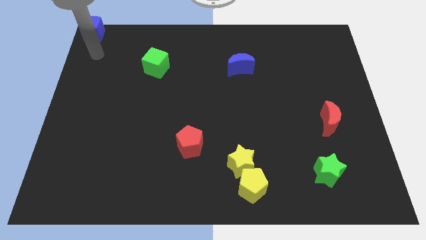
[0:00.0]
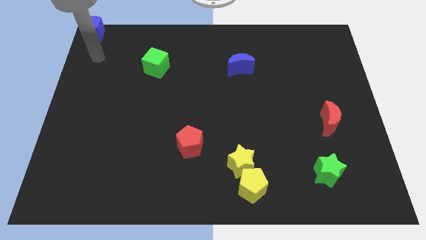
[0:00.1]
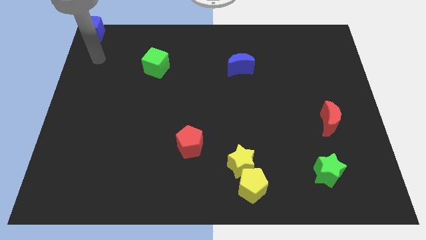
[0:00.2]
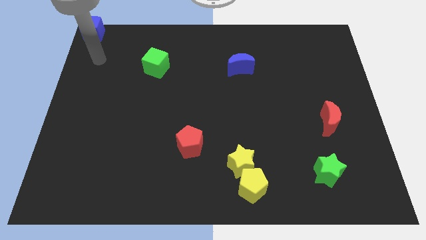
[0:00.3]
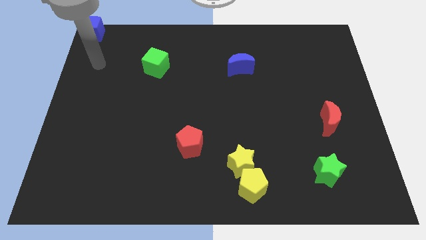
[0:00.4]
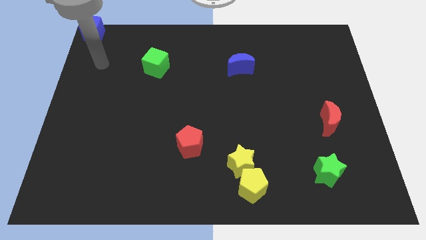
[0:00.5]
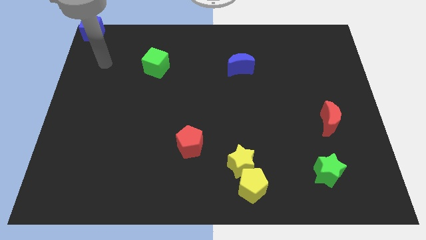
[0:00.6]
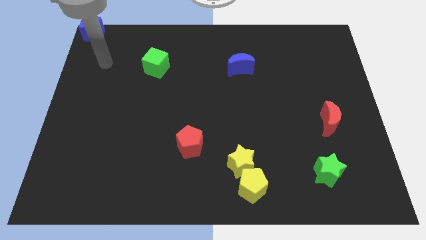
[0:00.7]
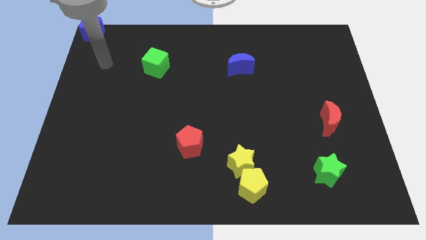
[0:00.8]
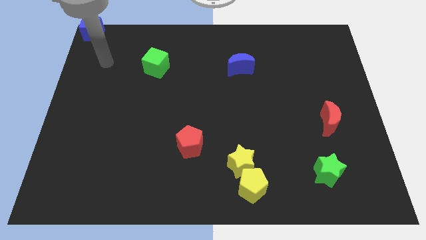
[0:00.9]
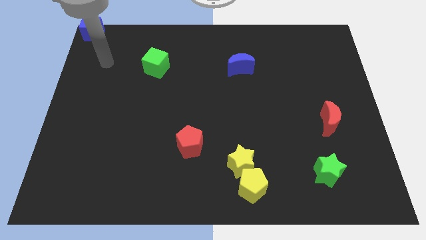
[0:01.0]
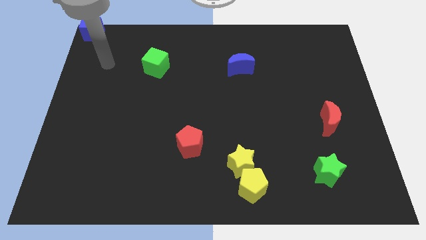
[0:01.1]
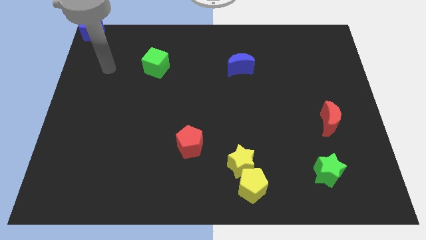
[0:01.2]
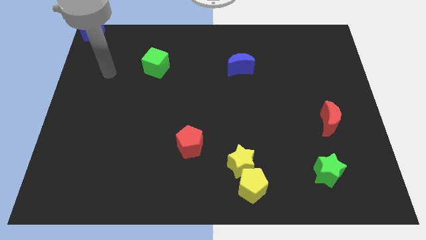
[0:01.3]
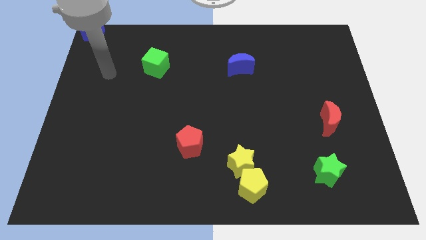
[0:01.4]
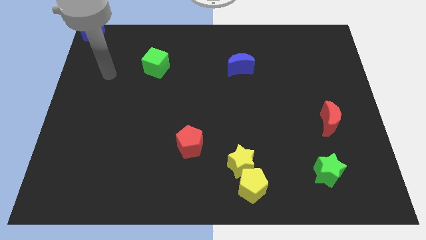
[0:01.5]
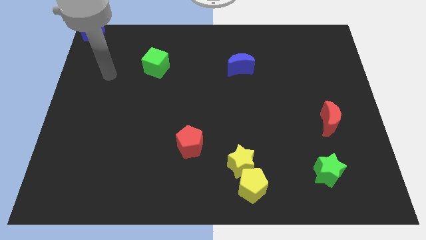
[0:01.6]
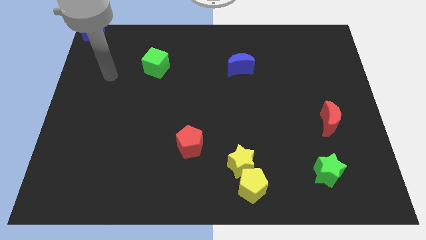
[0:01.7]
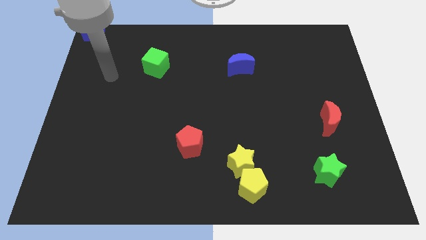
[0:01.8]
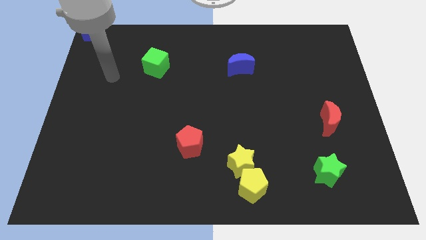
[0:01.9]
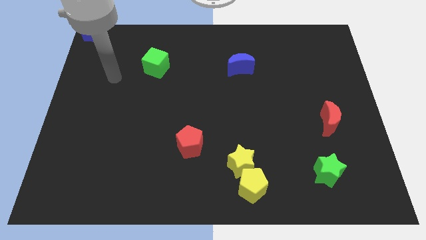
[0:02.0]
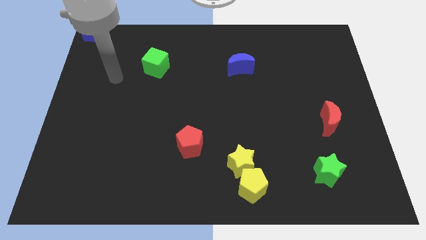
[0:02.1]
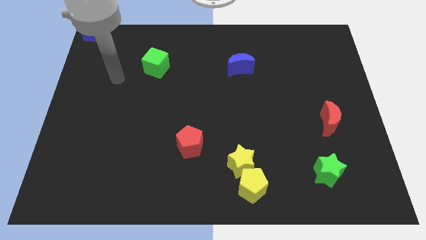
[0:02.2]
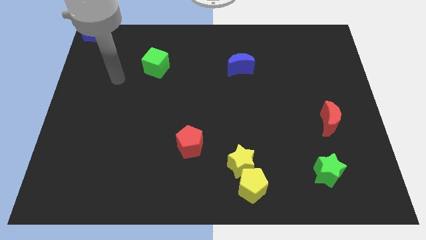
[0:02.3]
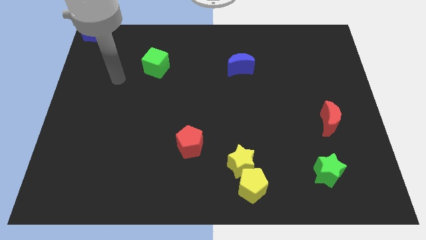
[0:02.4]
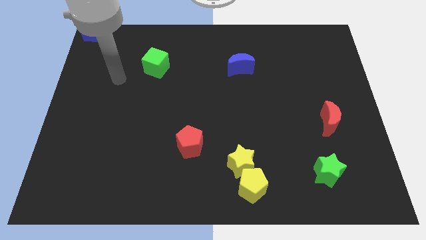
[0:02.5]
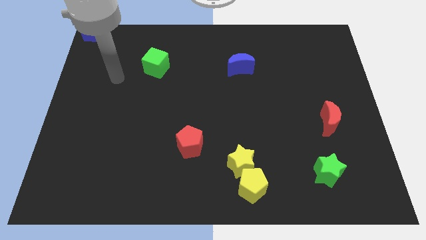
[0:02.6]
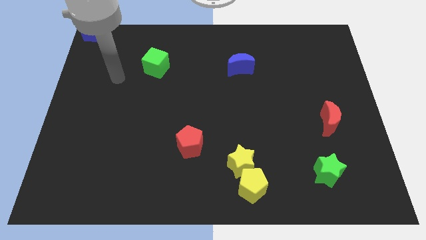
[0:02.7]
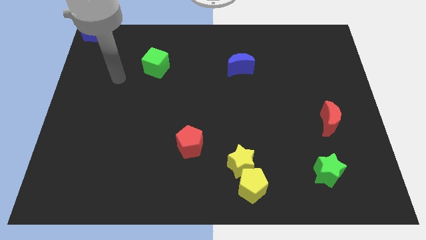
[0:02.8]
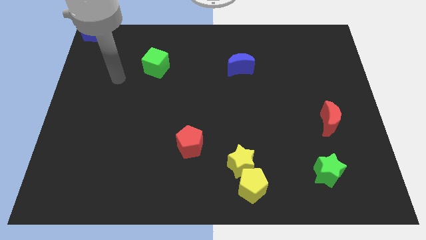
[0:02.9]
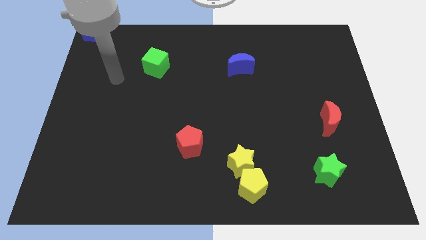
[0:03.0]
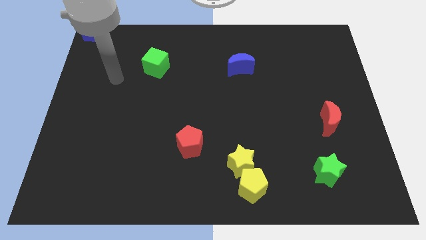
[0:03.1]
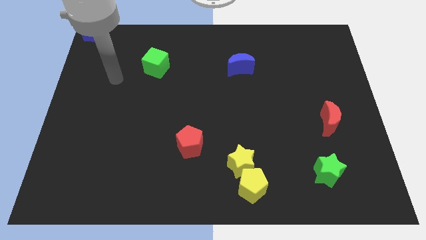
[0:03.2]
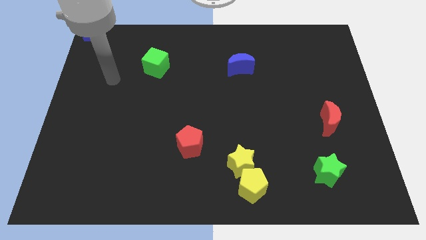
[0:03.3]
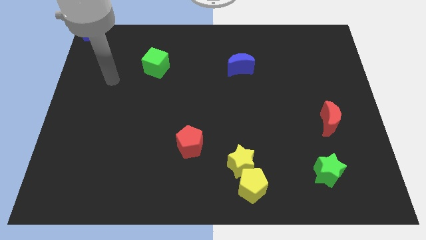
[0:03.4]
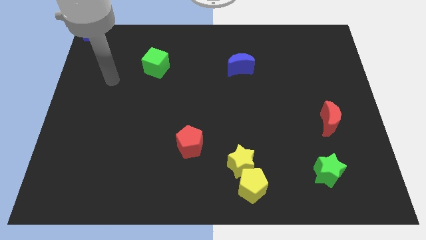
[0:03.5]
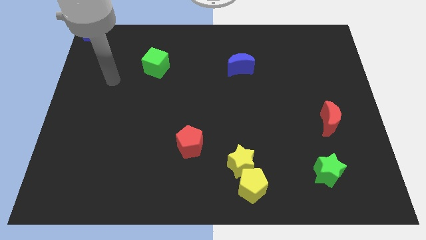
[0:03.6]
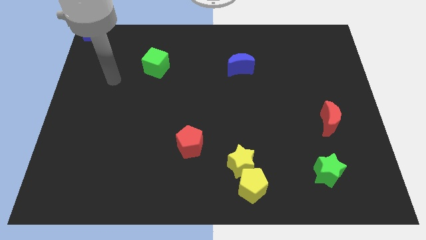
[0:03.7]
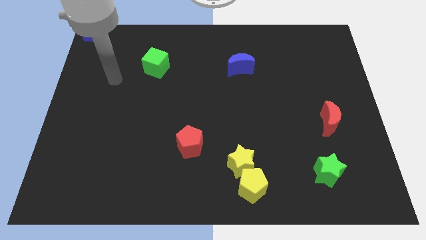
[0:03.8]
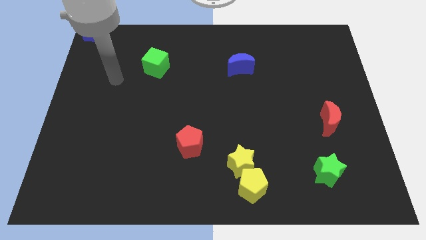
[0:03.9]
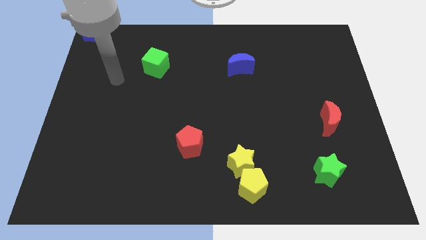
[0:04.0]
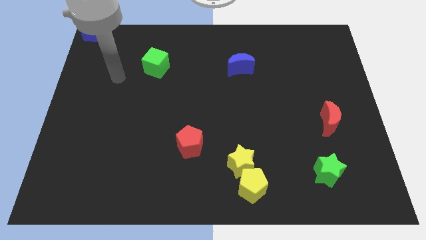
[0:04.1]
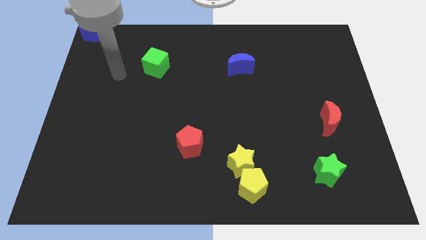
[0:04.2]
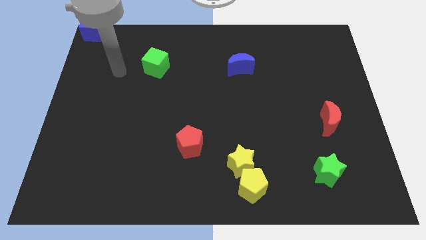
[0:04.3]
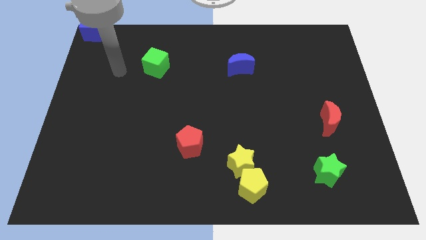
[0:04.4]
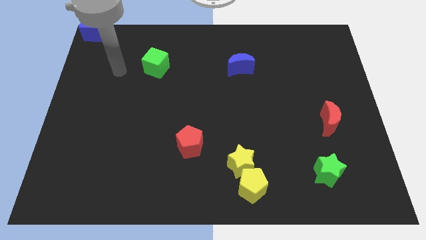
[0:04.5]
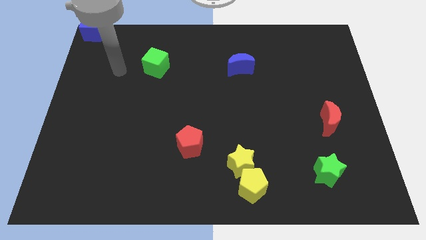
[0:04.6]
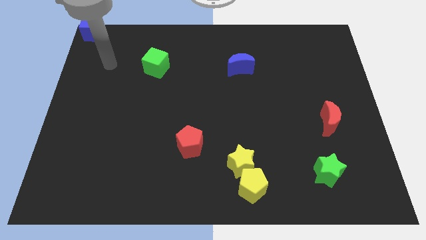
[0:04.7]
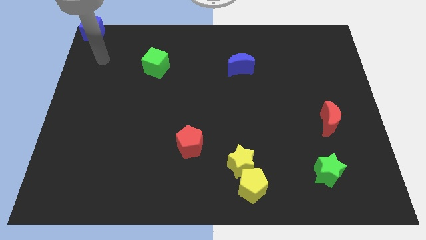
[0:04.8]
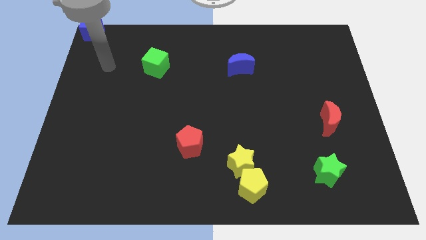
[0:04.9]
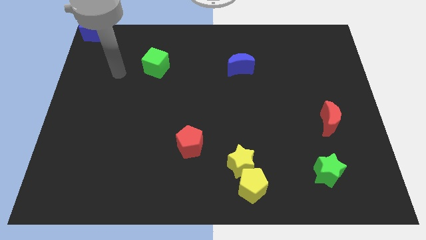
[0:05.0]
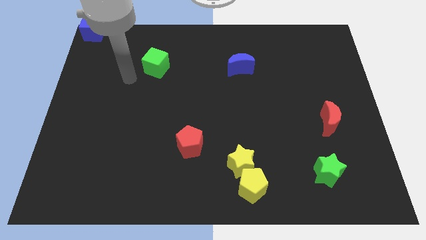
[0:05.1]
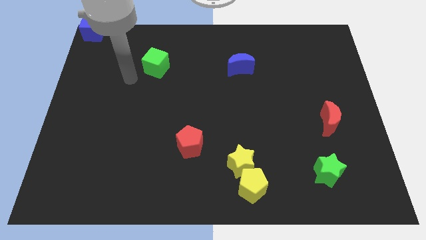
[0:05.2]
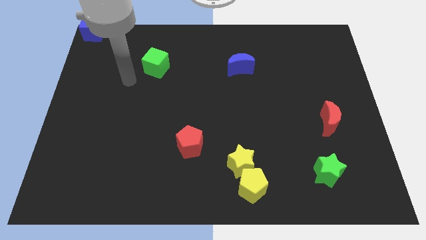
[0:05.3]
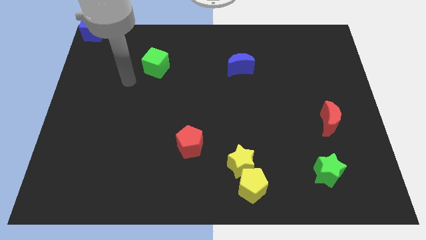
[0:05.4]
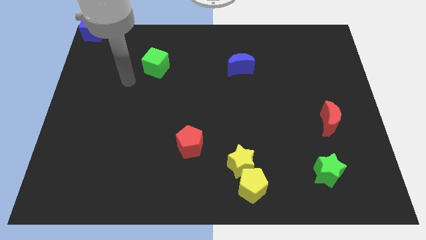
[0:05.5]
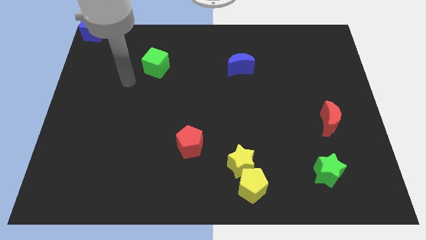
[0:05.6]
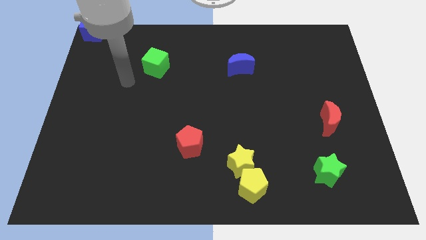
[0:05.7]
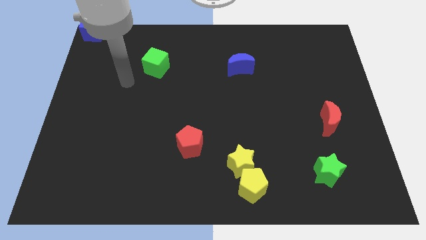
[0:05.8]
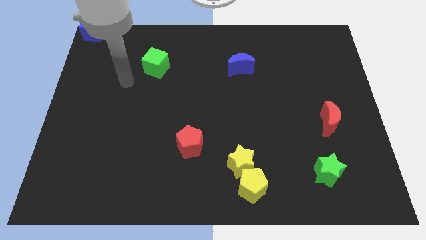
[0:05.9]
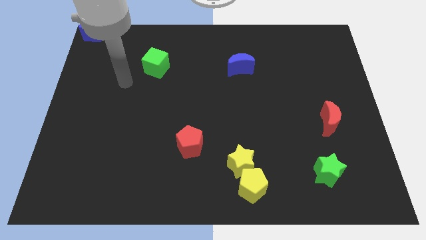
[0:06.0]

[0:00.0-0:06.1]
move your arm away from the blue cube

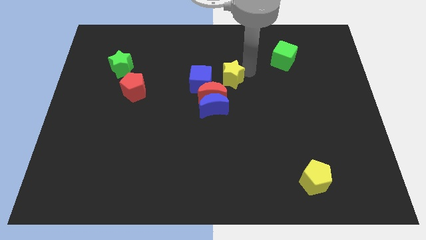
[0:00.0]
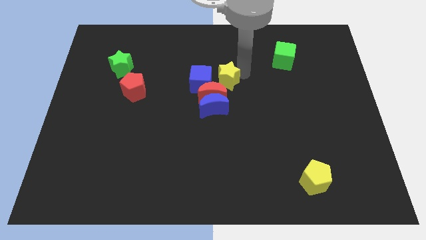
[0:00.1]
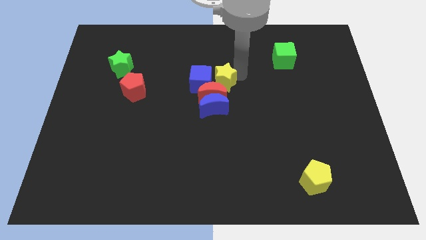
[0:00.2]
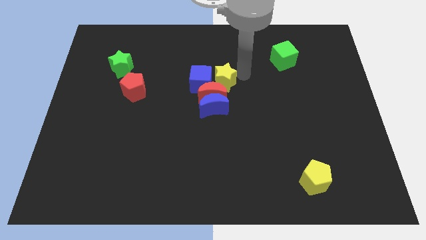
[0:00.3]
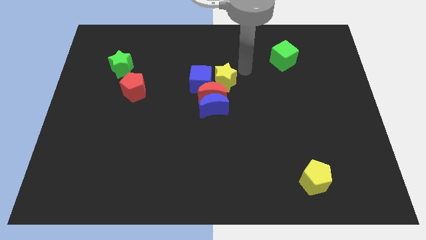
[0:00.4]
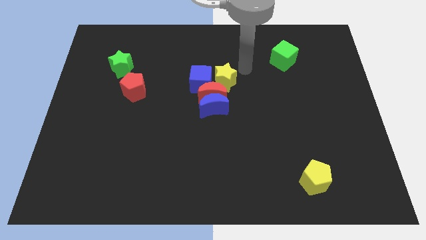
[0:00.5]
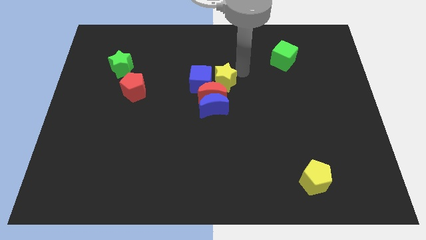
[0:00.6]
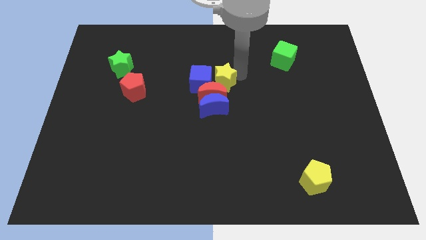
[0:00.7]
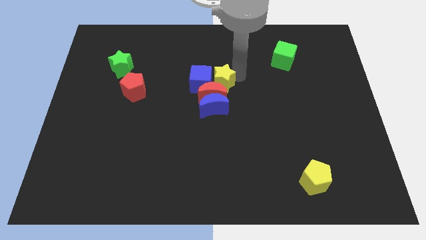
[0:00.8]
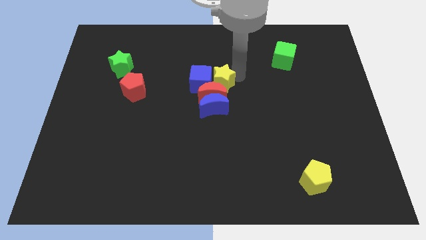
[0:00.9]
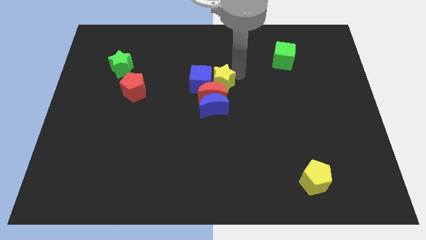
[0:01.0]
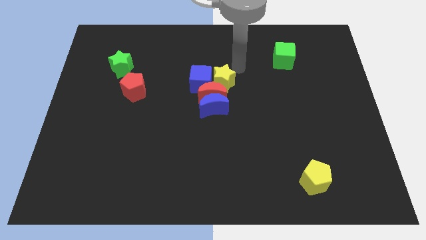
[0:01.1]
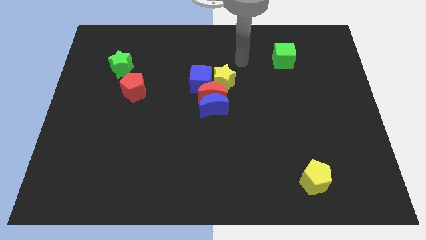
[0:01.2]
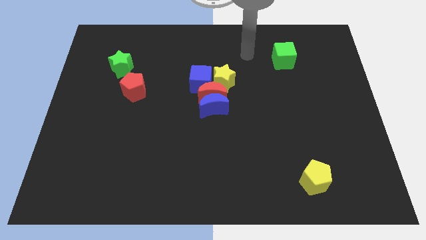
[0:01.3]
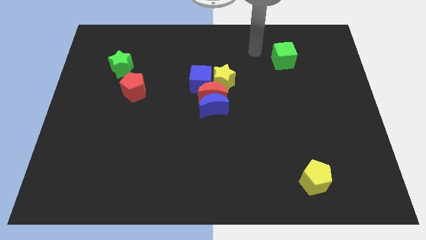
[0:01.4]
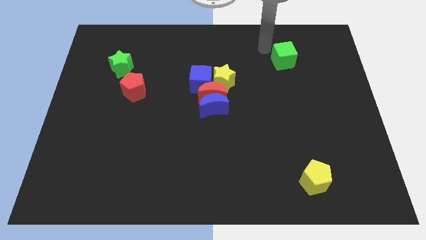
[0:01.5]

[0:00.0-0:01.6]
move yellow star to the right of blue cube

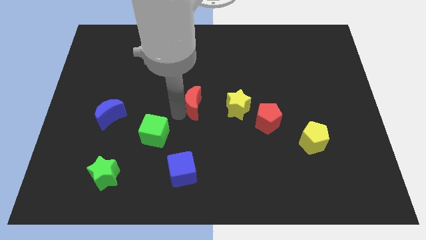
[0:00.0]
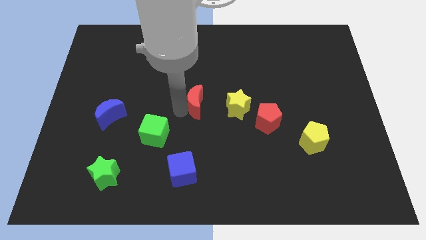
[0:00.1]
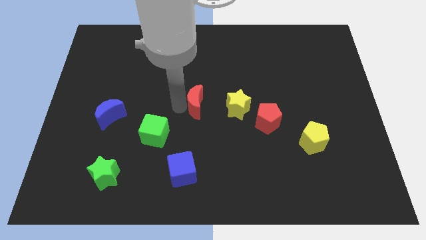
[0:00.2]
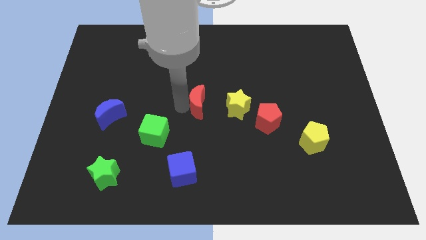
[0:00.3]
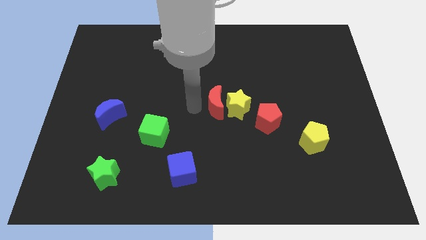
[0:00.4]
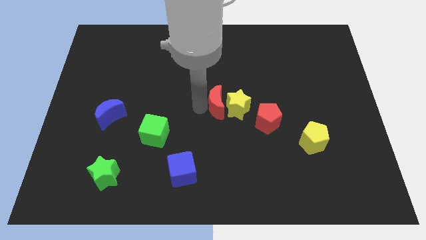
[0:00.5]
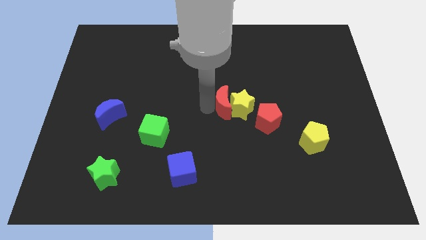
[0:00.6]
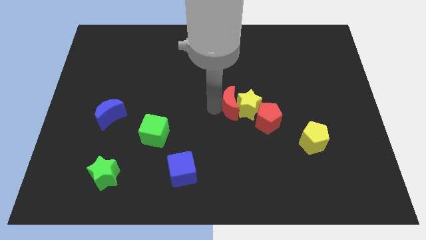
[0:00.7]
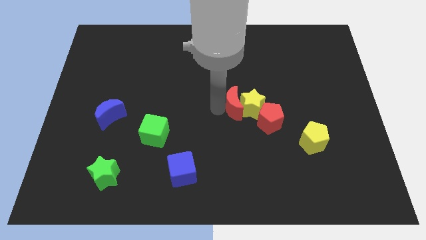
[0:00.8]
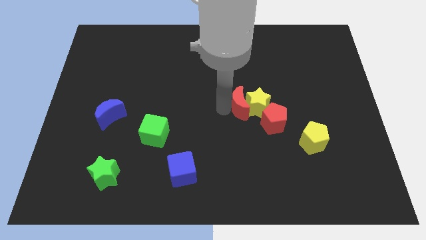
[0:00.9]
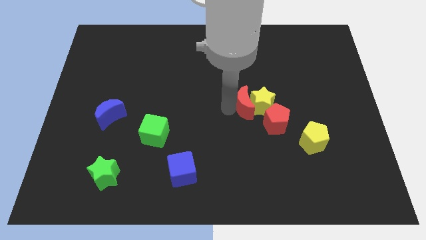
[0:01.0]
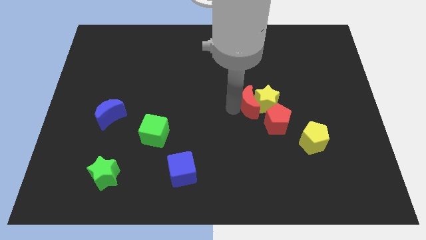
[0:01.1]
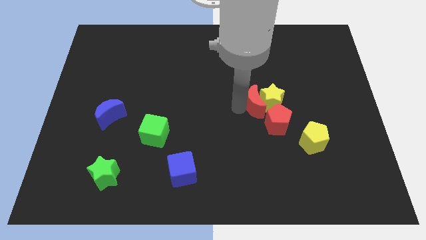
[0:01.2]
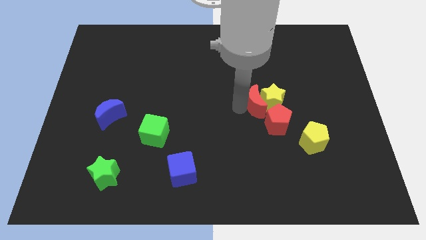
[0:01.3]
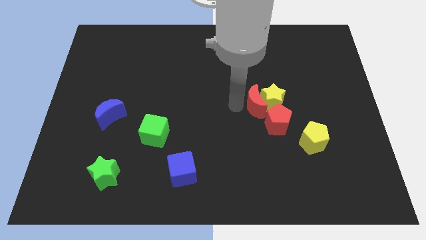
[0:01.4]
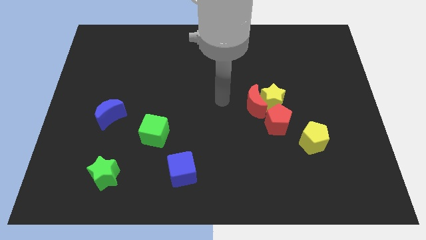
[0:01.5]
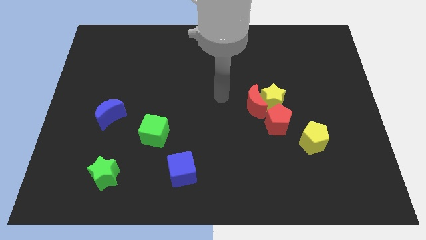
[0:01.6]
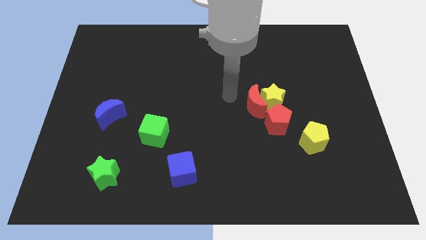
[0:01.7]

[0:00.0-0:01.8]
push the red moon and yellow star above the red pentagon
